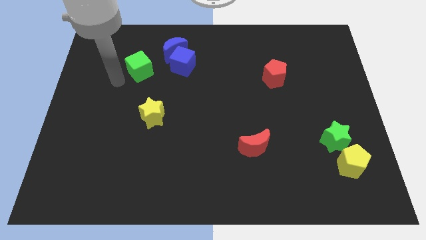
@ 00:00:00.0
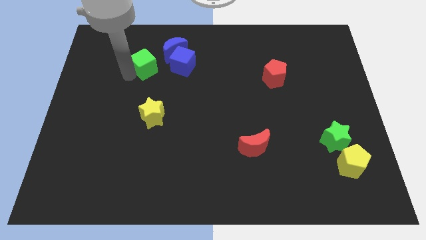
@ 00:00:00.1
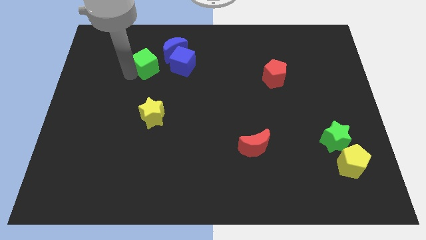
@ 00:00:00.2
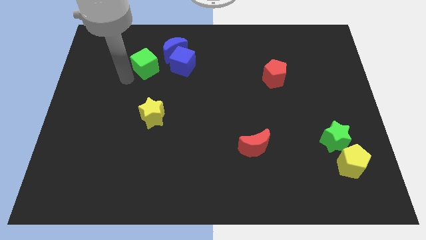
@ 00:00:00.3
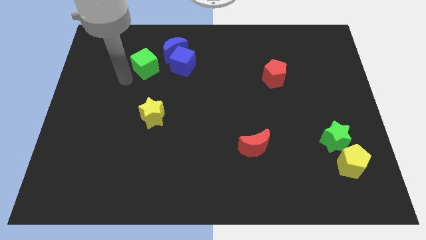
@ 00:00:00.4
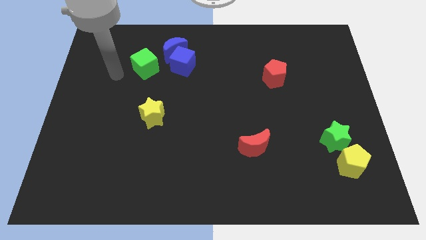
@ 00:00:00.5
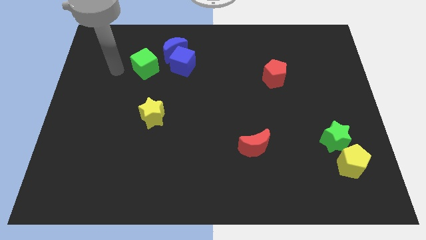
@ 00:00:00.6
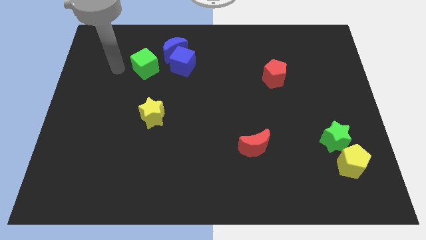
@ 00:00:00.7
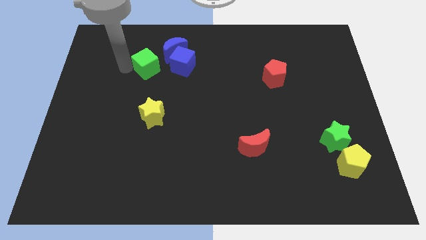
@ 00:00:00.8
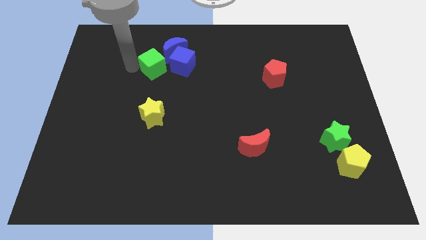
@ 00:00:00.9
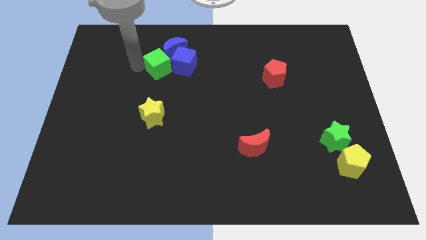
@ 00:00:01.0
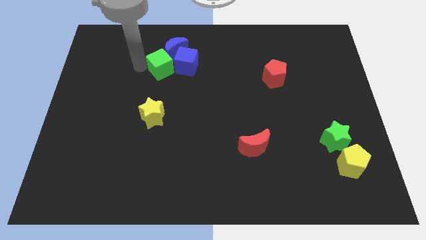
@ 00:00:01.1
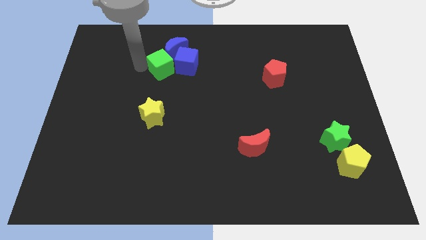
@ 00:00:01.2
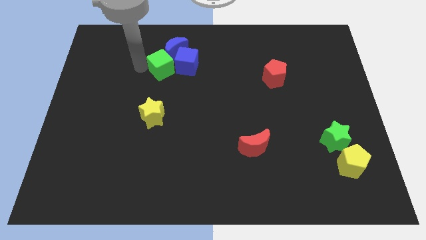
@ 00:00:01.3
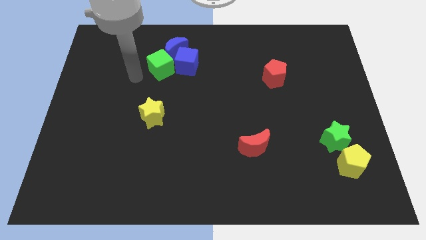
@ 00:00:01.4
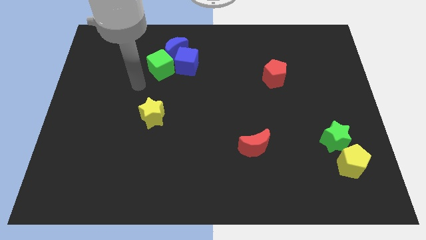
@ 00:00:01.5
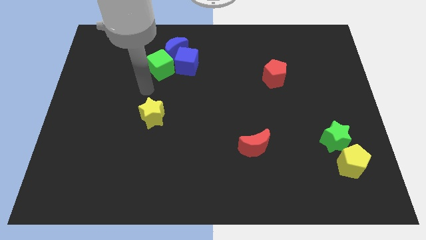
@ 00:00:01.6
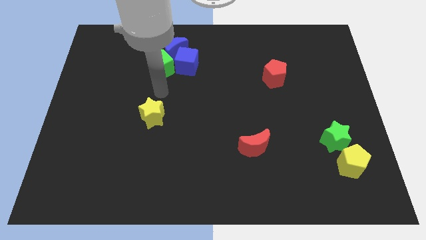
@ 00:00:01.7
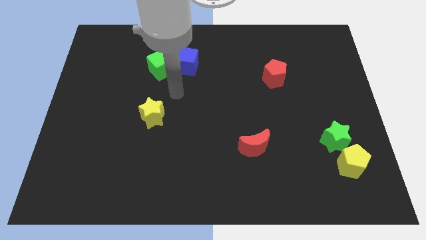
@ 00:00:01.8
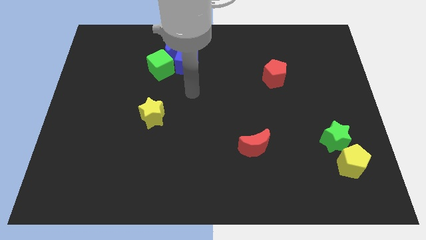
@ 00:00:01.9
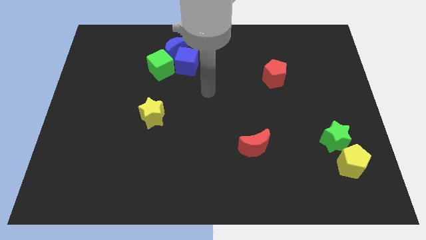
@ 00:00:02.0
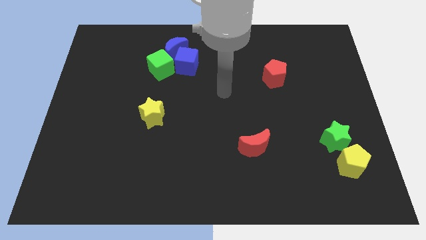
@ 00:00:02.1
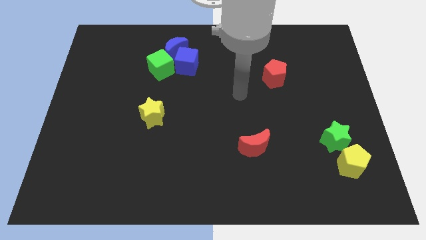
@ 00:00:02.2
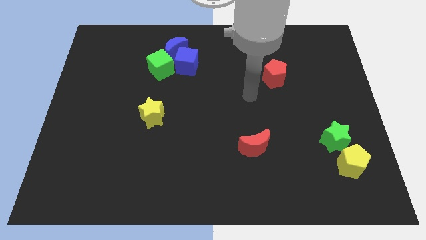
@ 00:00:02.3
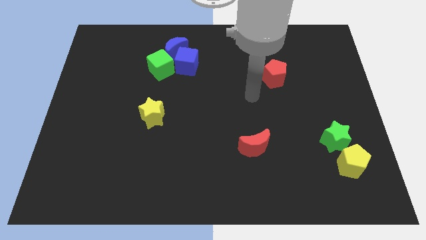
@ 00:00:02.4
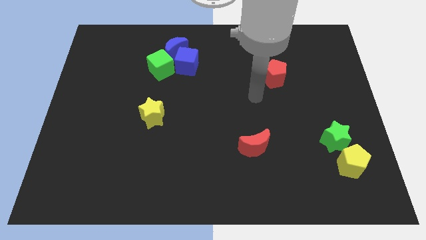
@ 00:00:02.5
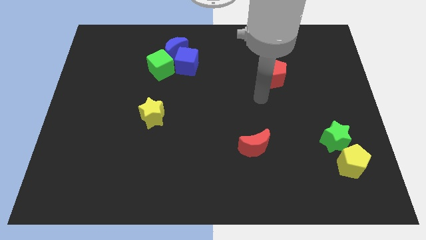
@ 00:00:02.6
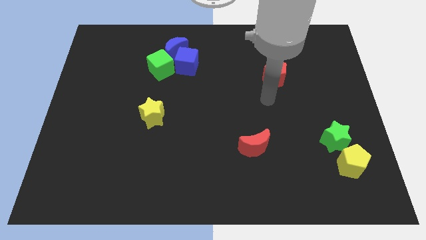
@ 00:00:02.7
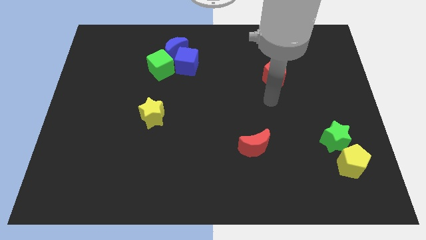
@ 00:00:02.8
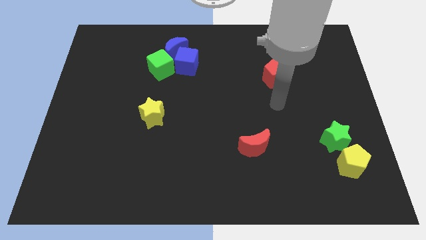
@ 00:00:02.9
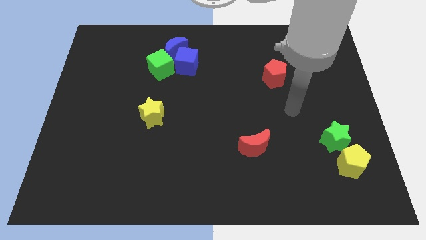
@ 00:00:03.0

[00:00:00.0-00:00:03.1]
point your arm below red penatgon

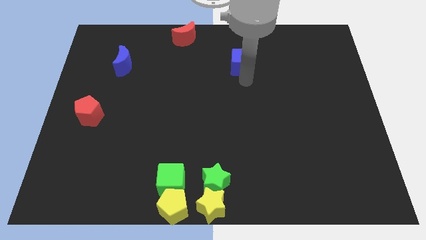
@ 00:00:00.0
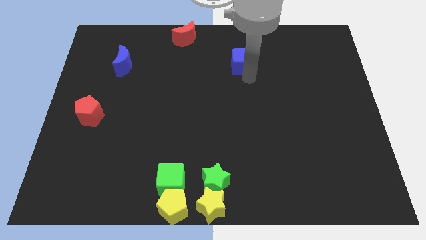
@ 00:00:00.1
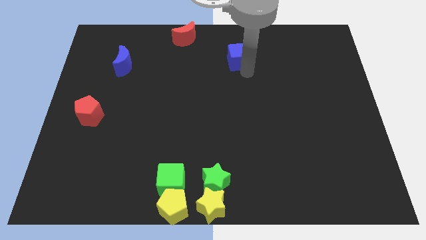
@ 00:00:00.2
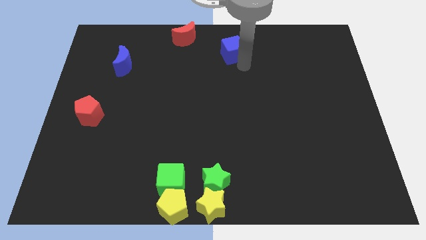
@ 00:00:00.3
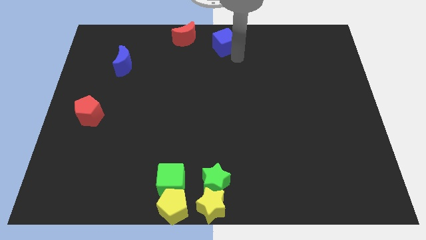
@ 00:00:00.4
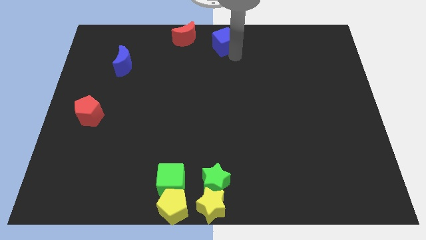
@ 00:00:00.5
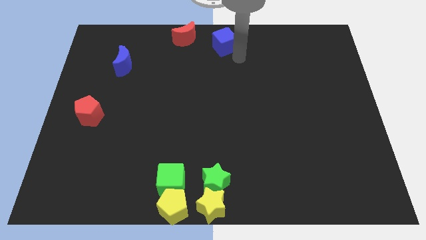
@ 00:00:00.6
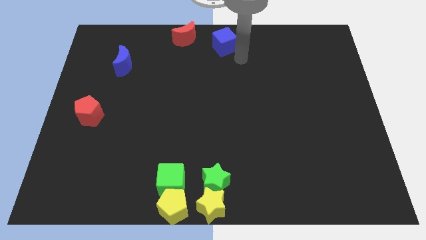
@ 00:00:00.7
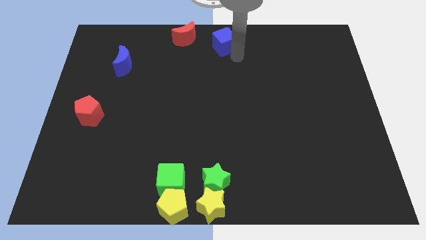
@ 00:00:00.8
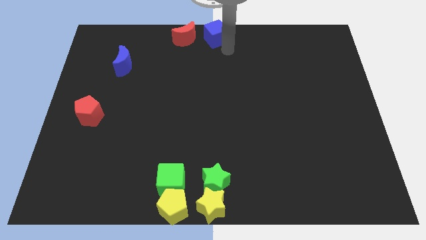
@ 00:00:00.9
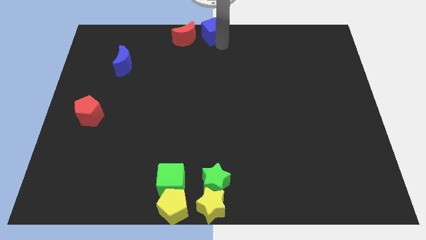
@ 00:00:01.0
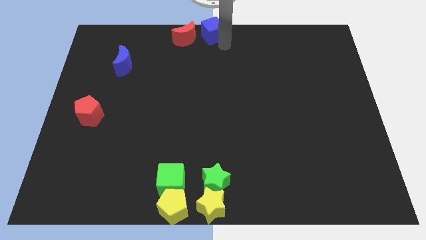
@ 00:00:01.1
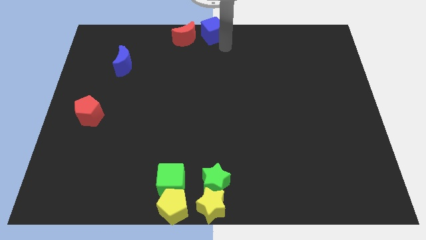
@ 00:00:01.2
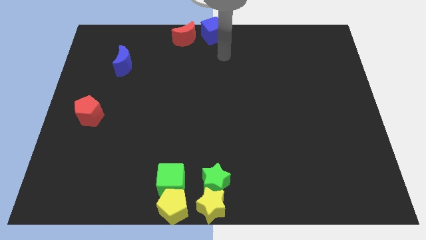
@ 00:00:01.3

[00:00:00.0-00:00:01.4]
move the blue cube to the top center of the board

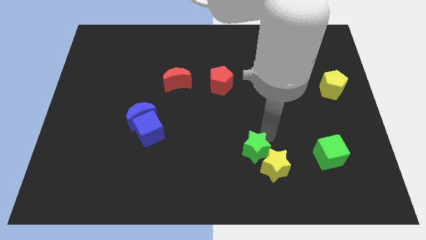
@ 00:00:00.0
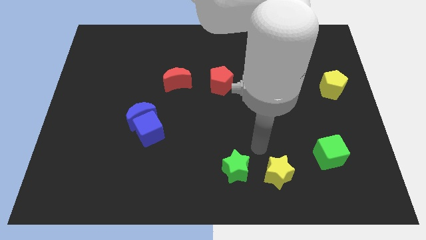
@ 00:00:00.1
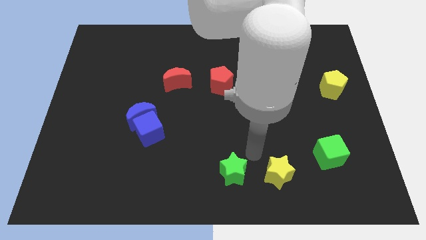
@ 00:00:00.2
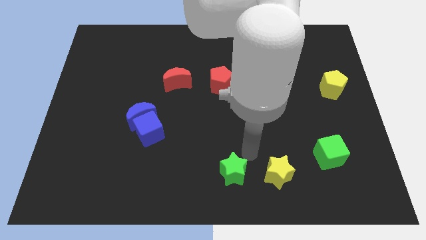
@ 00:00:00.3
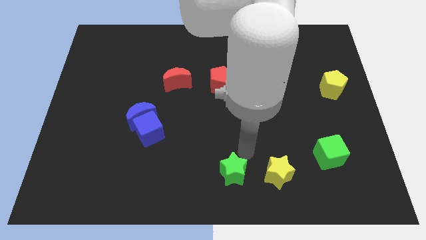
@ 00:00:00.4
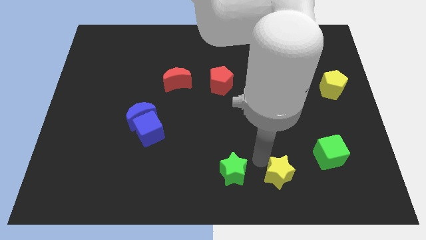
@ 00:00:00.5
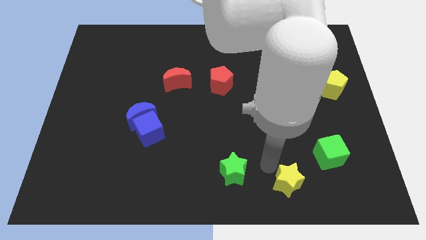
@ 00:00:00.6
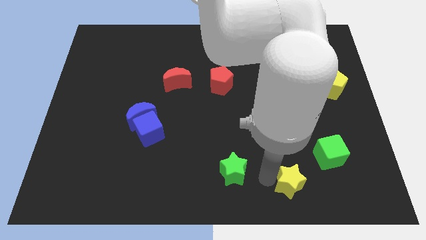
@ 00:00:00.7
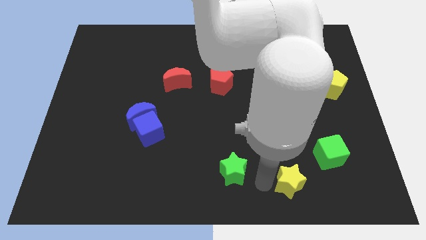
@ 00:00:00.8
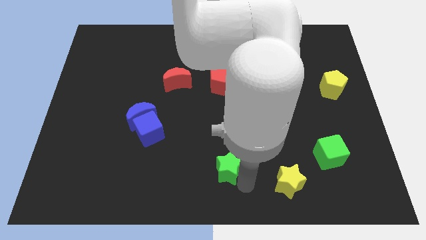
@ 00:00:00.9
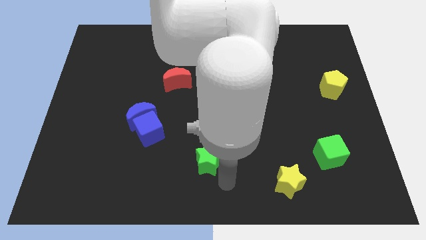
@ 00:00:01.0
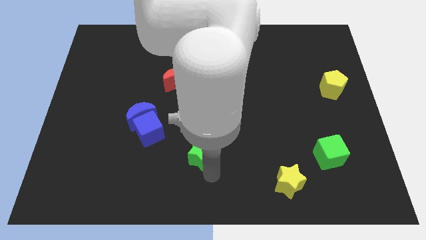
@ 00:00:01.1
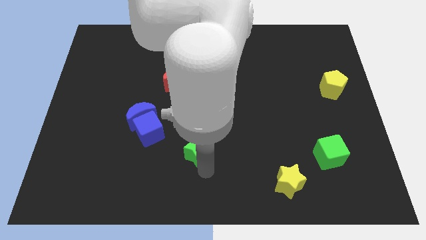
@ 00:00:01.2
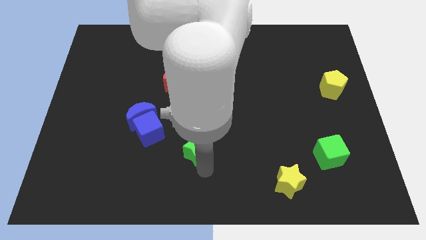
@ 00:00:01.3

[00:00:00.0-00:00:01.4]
separate the green star and yellow star

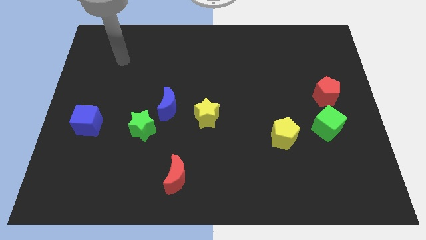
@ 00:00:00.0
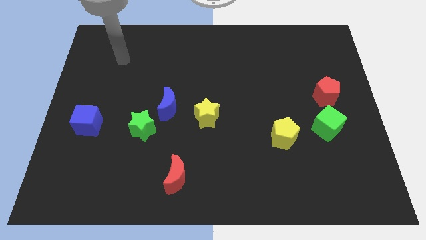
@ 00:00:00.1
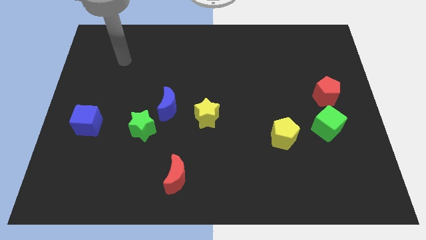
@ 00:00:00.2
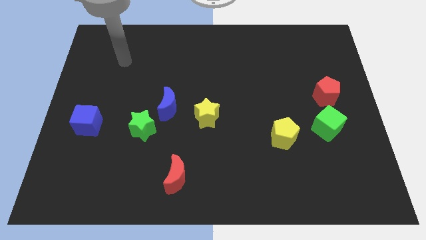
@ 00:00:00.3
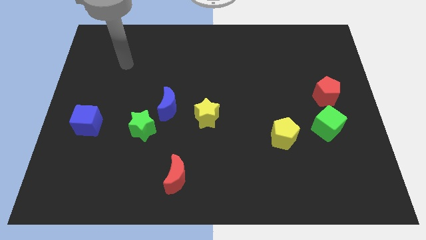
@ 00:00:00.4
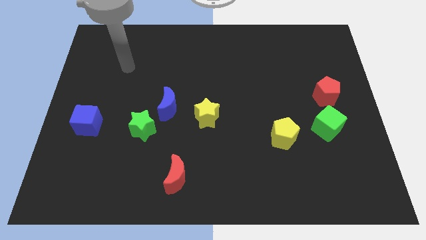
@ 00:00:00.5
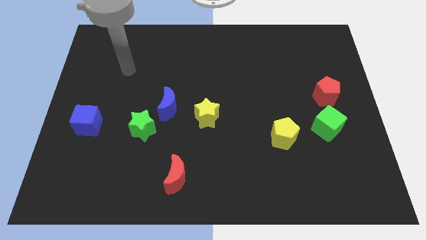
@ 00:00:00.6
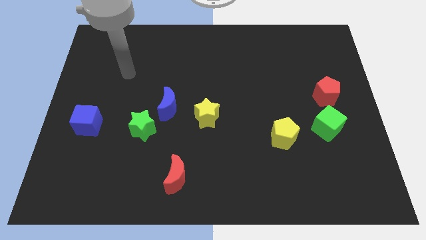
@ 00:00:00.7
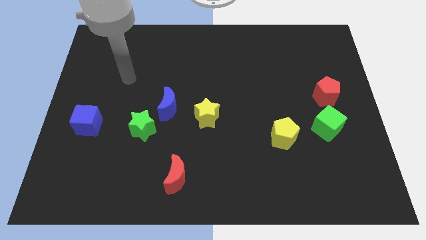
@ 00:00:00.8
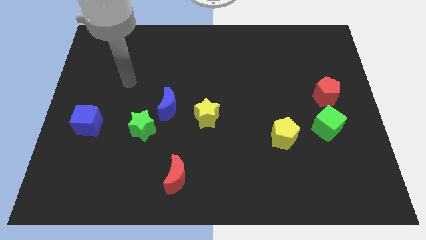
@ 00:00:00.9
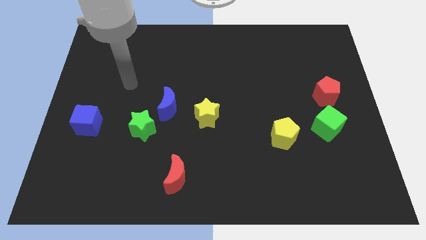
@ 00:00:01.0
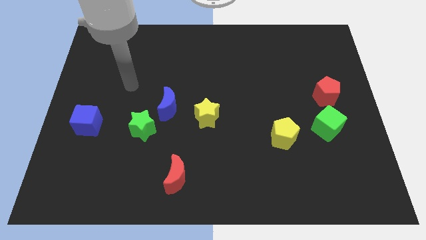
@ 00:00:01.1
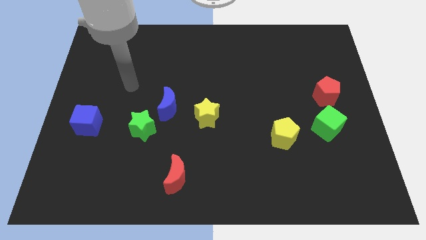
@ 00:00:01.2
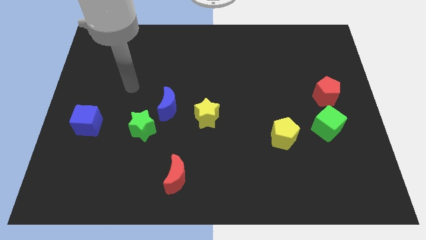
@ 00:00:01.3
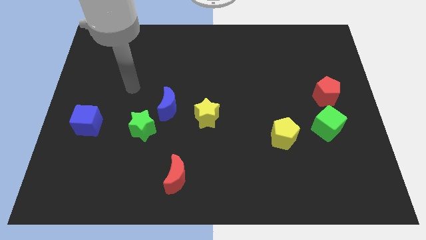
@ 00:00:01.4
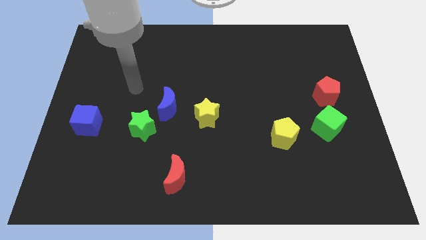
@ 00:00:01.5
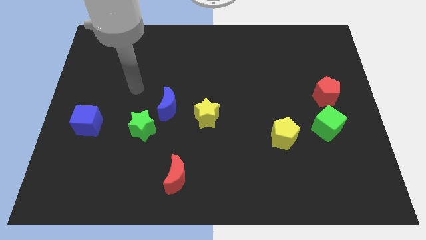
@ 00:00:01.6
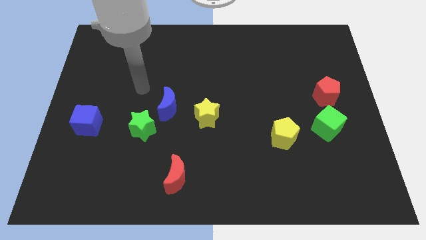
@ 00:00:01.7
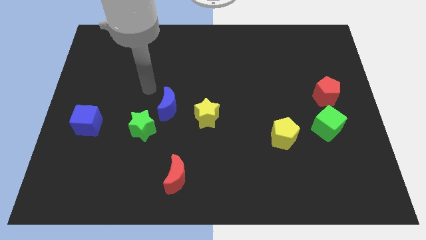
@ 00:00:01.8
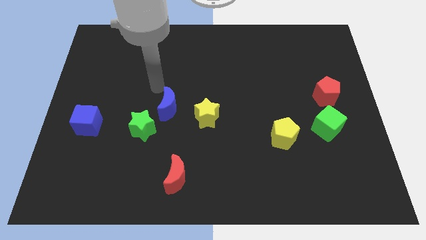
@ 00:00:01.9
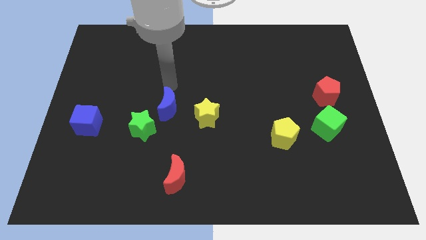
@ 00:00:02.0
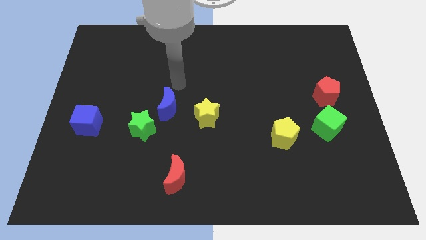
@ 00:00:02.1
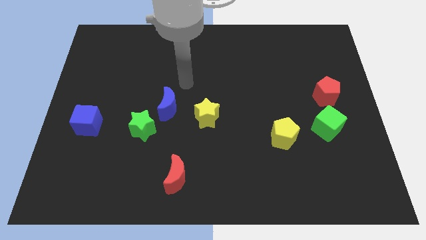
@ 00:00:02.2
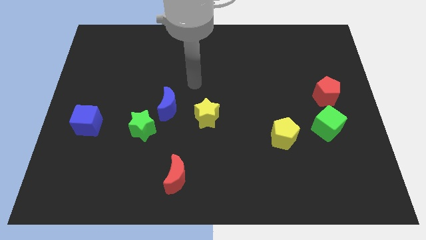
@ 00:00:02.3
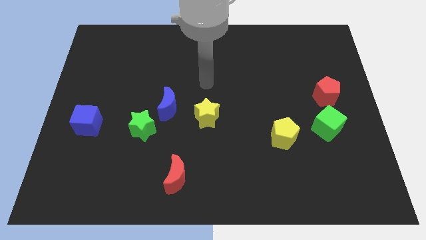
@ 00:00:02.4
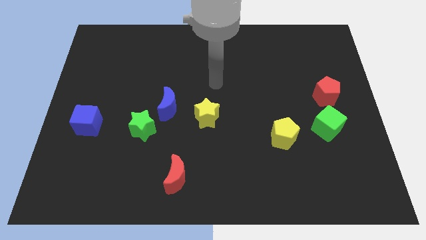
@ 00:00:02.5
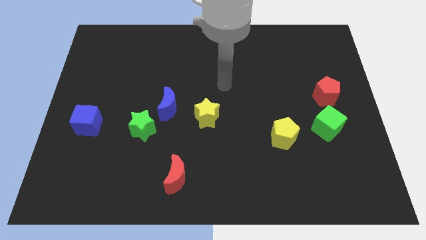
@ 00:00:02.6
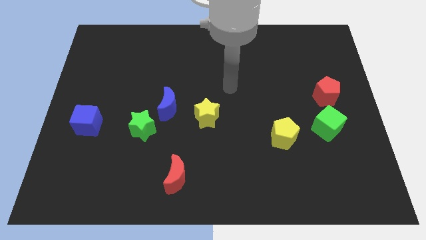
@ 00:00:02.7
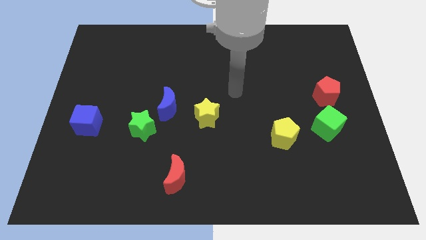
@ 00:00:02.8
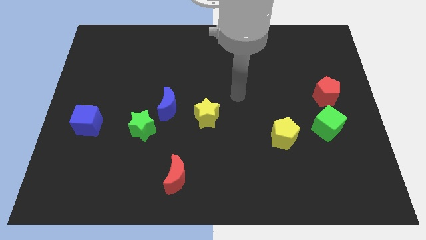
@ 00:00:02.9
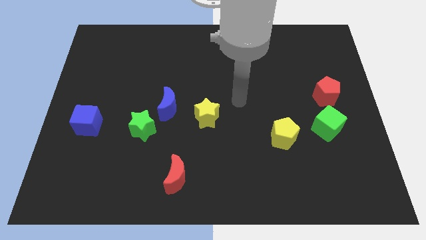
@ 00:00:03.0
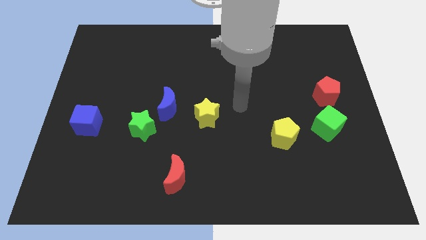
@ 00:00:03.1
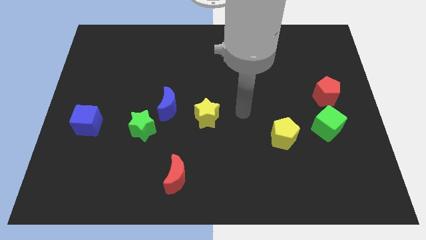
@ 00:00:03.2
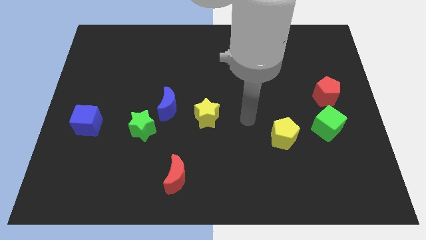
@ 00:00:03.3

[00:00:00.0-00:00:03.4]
move arm to the right of the yellow star
